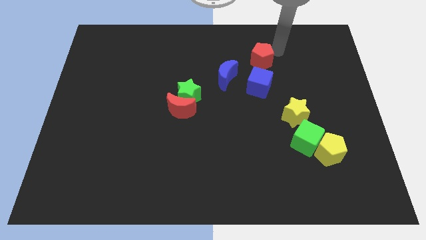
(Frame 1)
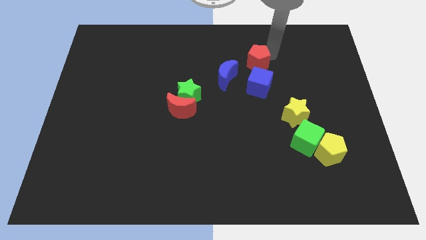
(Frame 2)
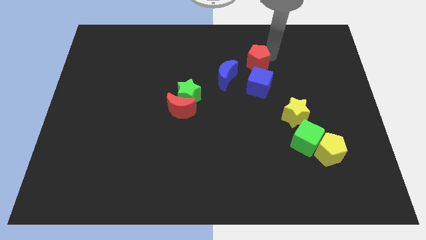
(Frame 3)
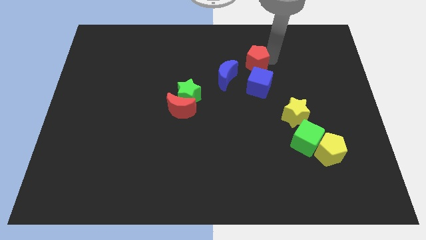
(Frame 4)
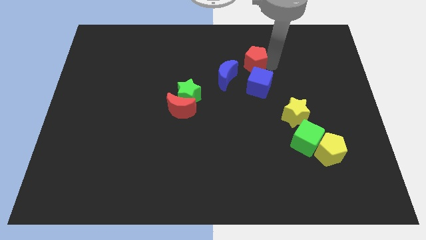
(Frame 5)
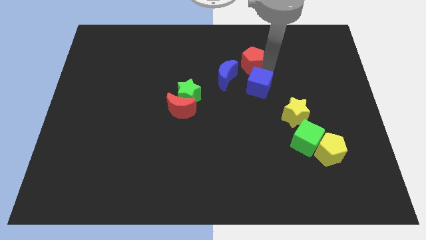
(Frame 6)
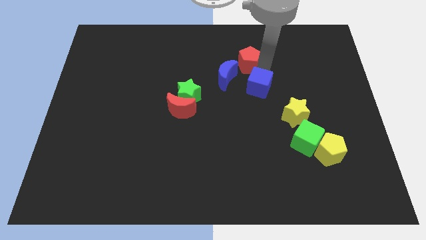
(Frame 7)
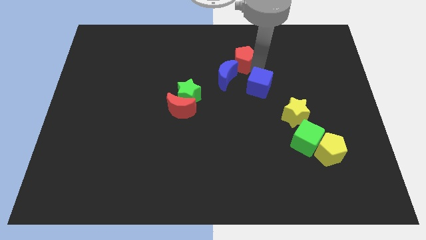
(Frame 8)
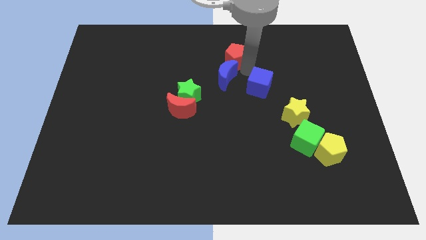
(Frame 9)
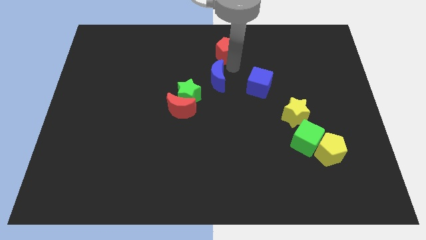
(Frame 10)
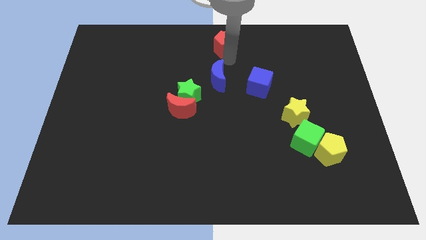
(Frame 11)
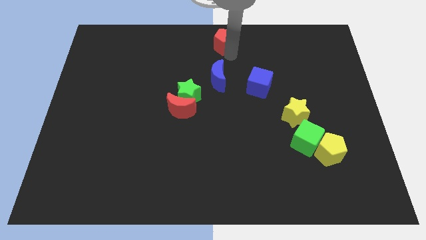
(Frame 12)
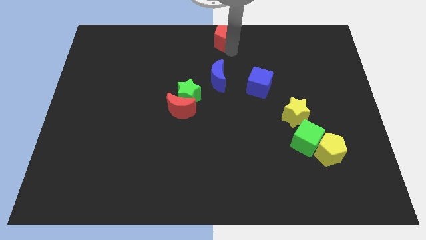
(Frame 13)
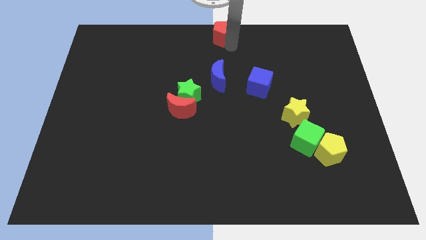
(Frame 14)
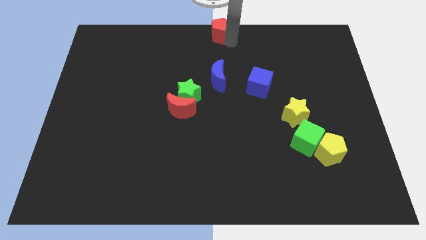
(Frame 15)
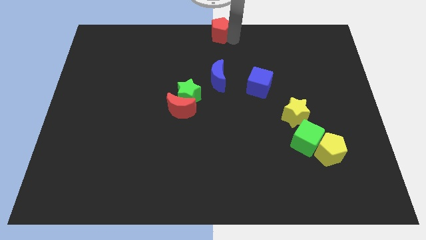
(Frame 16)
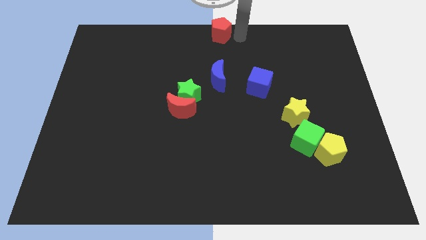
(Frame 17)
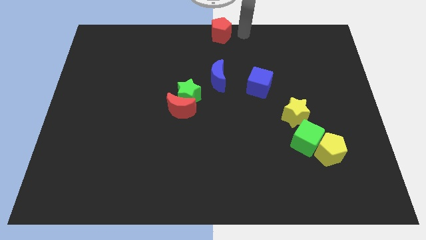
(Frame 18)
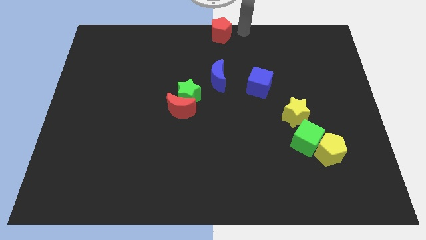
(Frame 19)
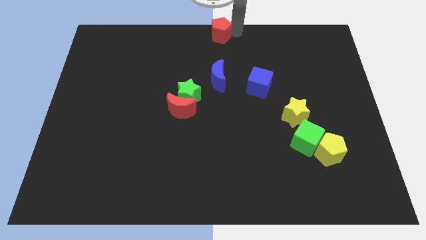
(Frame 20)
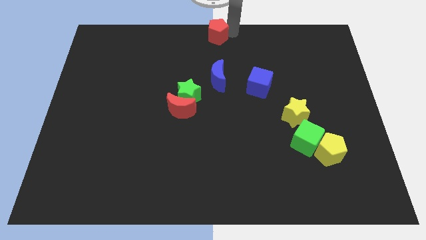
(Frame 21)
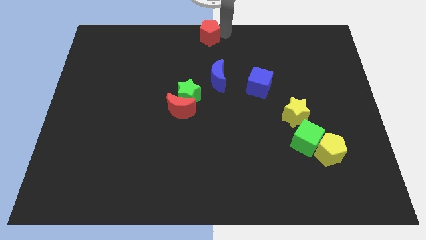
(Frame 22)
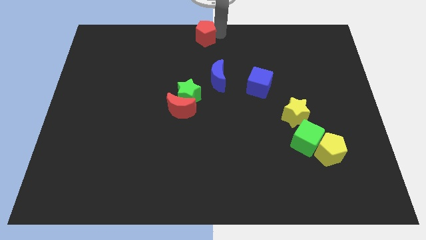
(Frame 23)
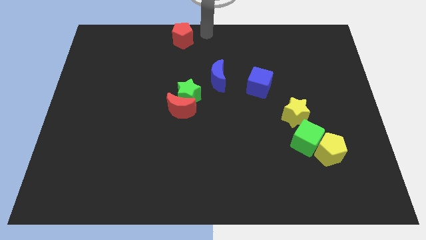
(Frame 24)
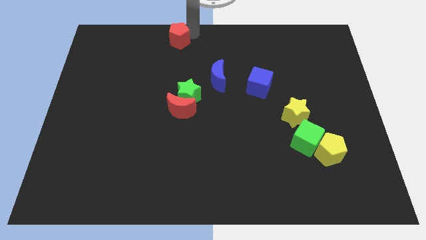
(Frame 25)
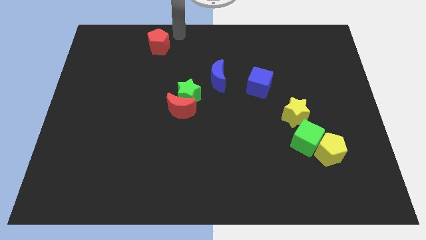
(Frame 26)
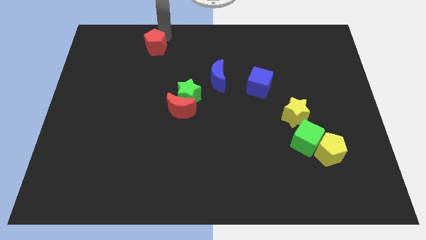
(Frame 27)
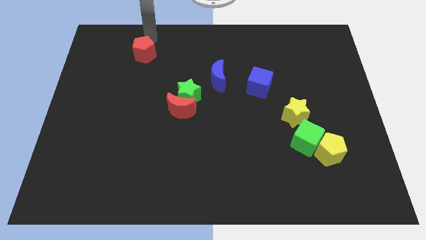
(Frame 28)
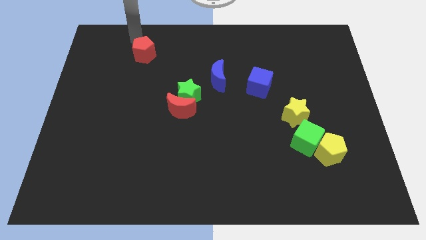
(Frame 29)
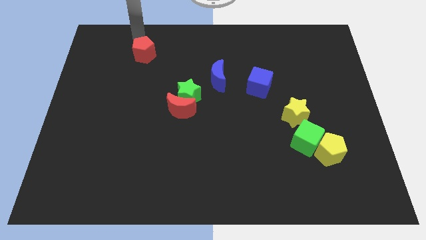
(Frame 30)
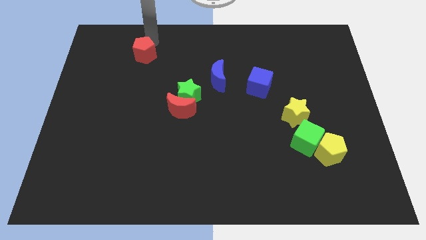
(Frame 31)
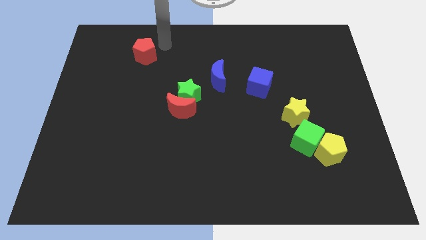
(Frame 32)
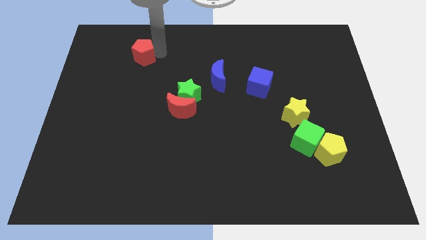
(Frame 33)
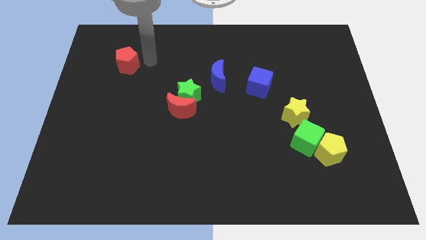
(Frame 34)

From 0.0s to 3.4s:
push the red pentagon to the left side of the board

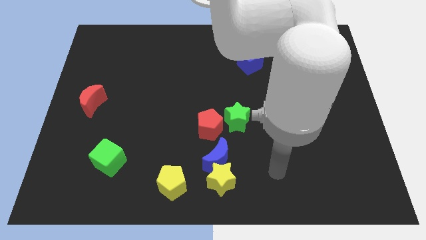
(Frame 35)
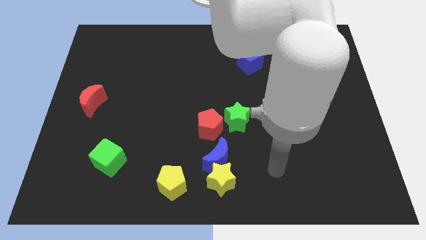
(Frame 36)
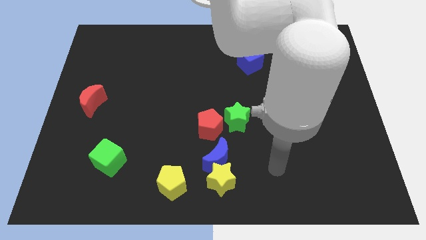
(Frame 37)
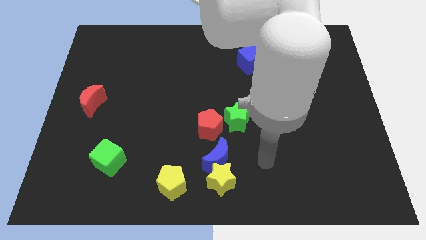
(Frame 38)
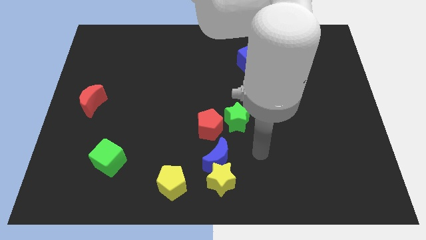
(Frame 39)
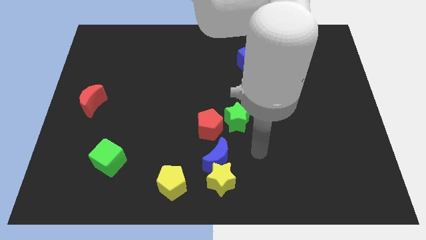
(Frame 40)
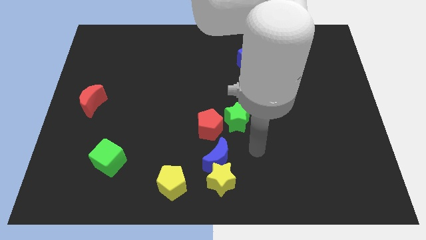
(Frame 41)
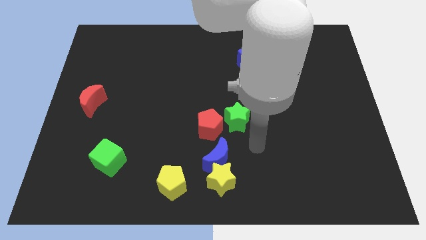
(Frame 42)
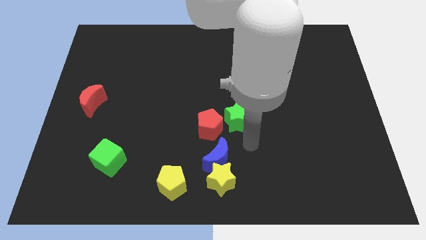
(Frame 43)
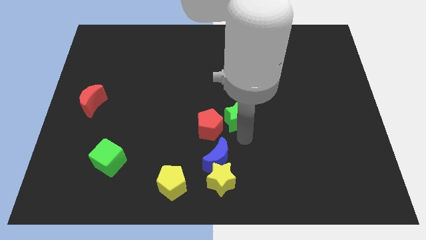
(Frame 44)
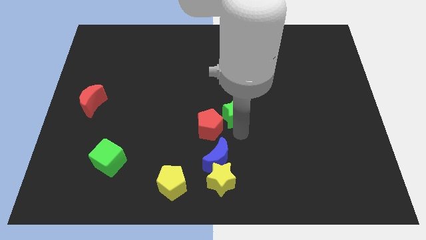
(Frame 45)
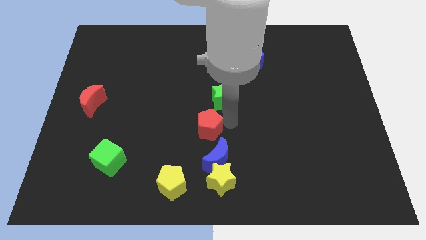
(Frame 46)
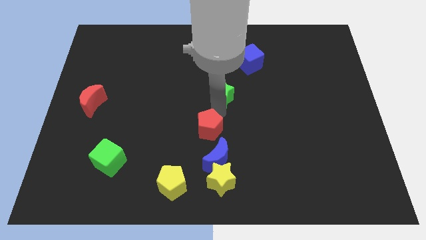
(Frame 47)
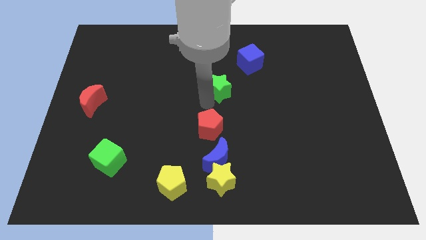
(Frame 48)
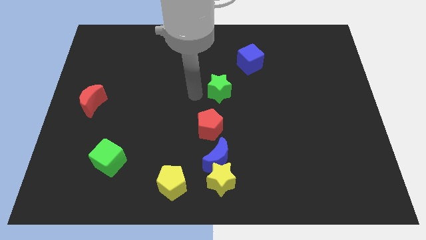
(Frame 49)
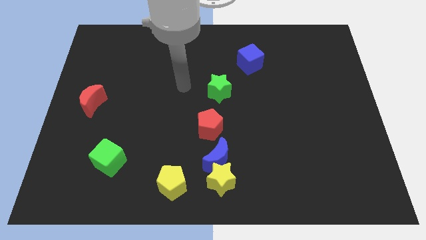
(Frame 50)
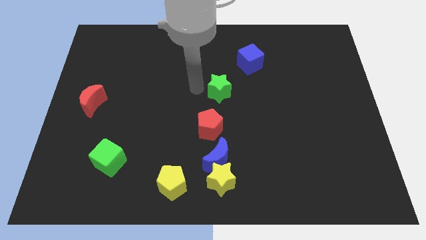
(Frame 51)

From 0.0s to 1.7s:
push the green star slightly

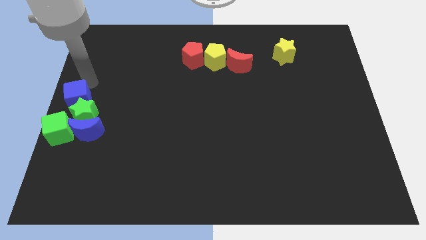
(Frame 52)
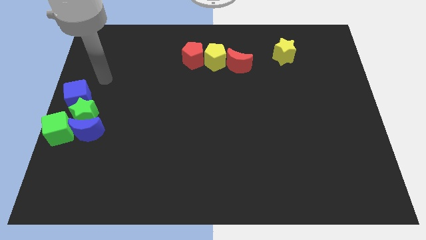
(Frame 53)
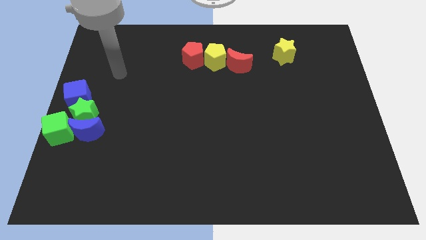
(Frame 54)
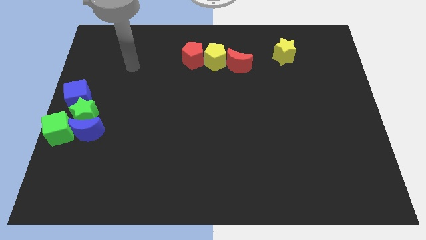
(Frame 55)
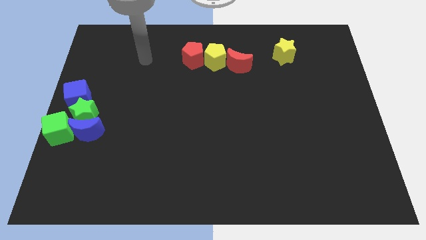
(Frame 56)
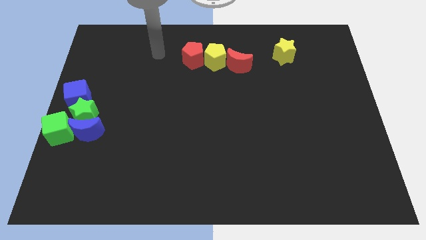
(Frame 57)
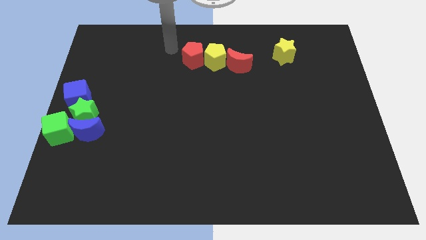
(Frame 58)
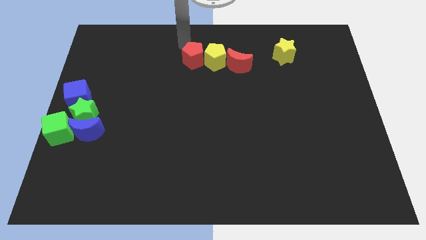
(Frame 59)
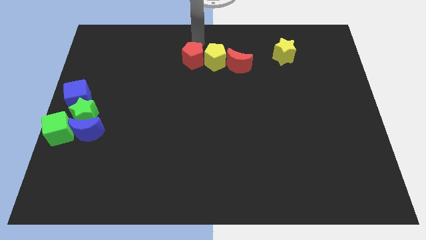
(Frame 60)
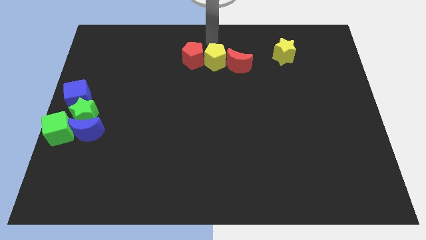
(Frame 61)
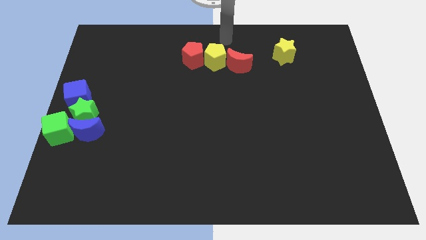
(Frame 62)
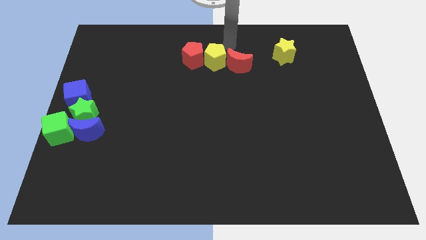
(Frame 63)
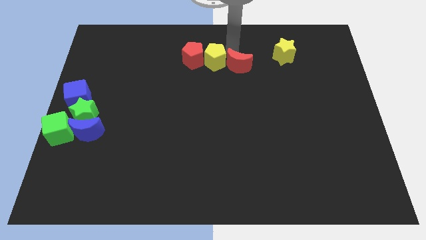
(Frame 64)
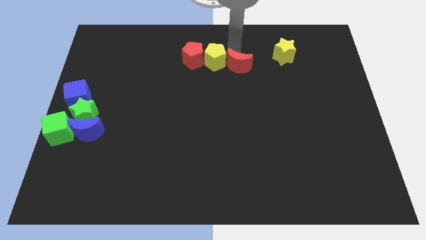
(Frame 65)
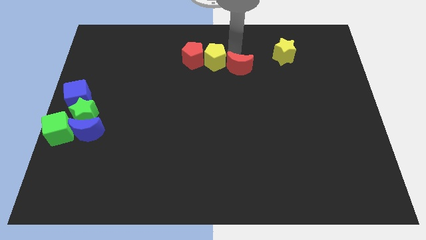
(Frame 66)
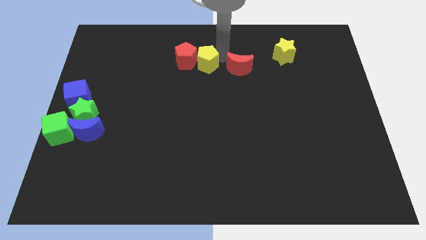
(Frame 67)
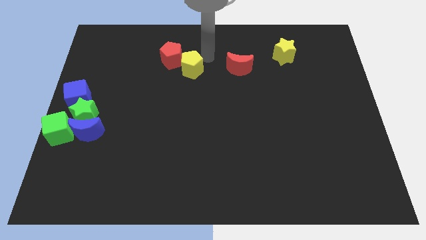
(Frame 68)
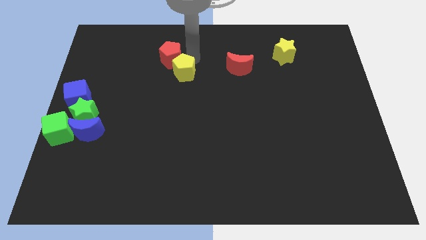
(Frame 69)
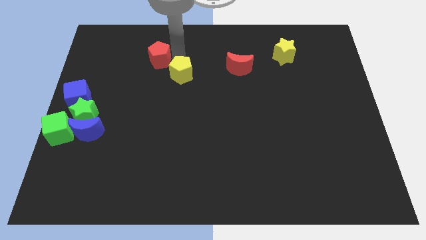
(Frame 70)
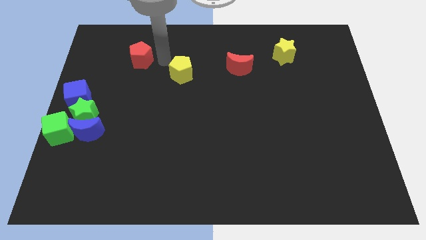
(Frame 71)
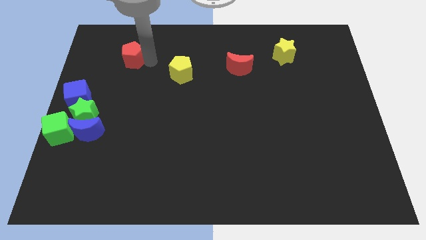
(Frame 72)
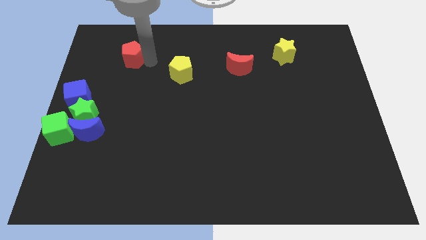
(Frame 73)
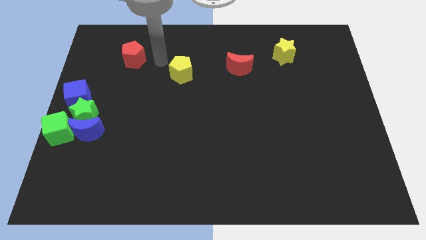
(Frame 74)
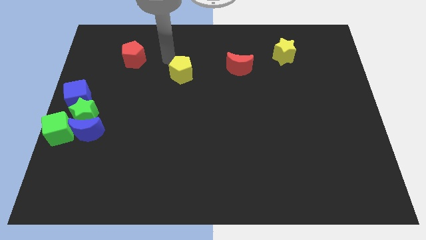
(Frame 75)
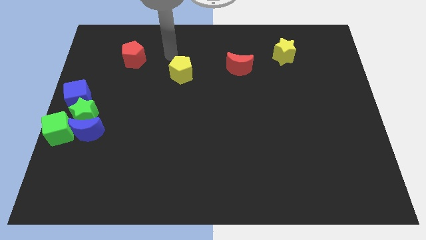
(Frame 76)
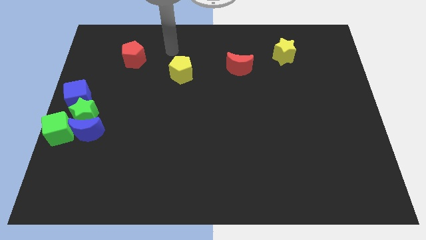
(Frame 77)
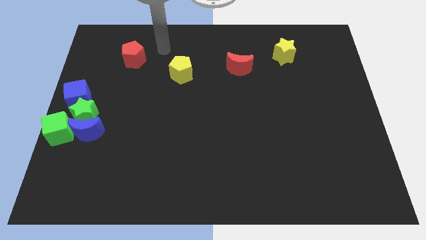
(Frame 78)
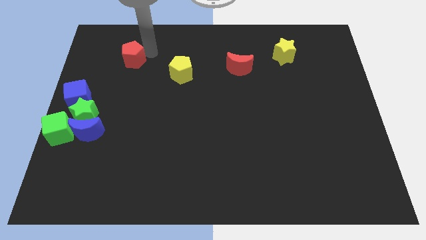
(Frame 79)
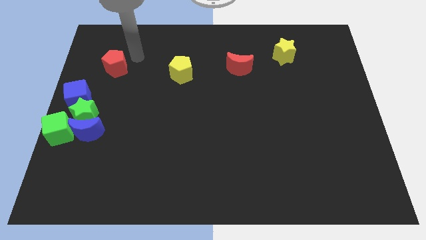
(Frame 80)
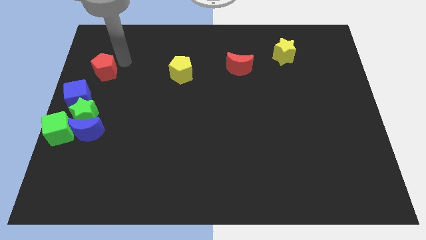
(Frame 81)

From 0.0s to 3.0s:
move your arm away from the blue cube

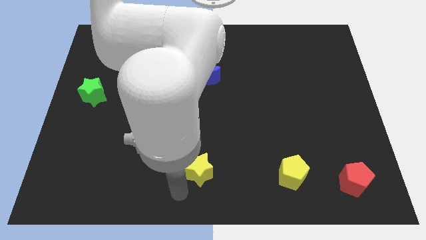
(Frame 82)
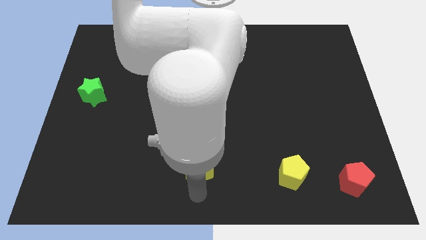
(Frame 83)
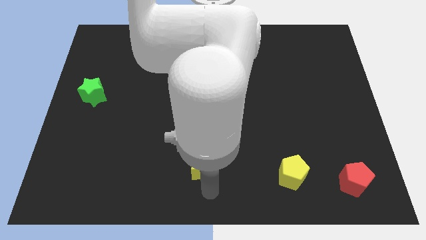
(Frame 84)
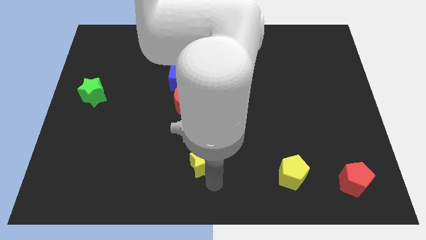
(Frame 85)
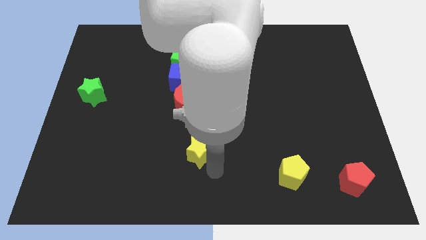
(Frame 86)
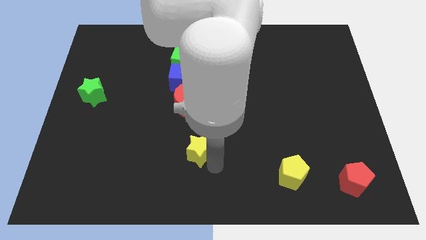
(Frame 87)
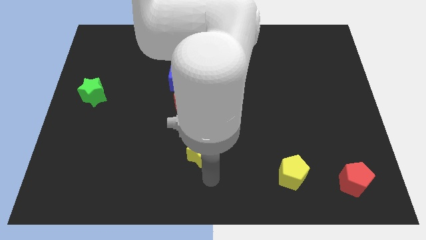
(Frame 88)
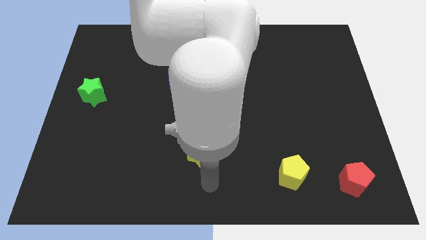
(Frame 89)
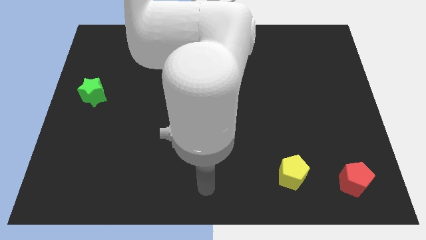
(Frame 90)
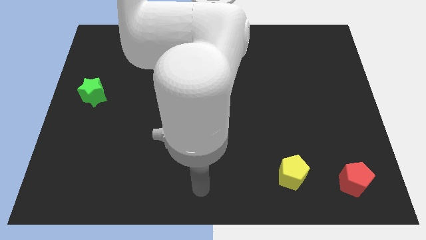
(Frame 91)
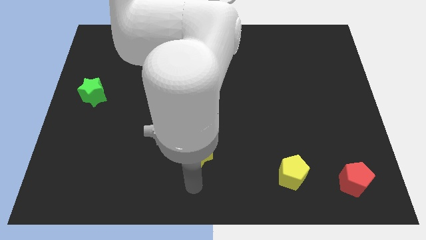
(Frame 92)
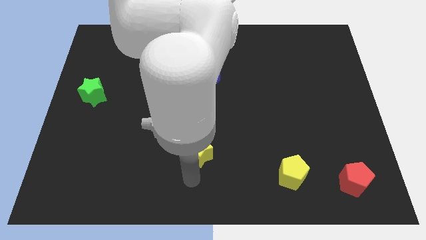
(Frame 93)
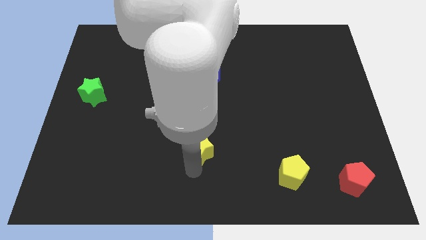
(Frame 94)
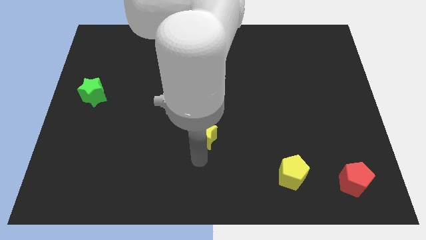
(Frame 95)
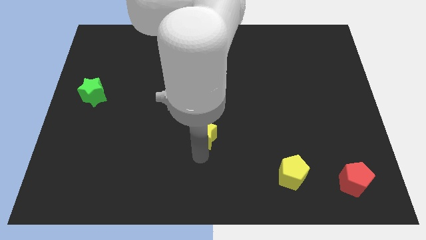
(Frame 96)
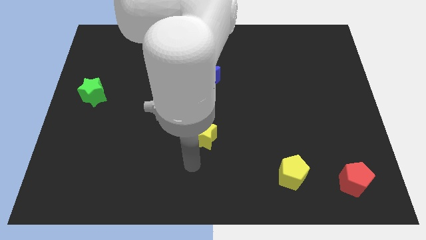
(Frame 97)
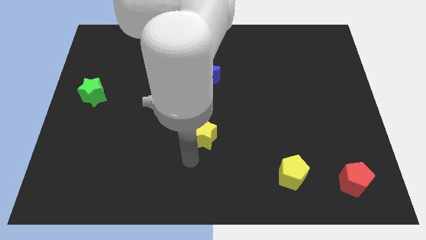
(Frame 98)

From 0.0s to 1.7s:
push the yellow star towards the top of the board
